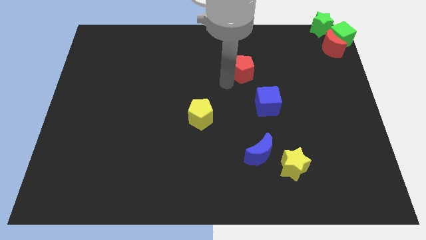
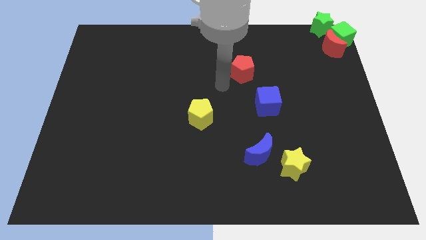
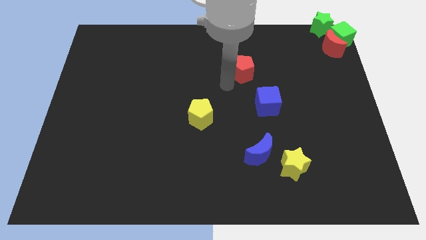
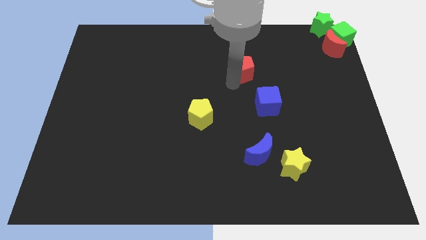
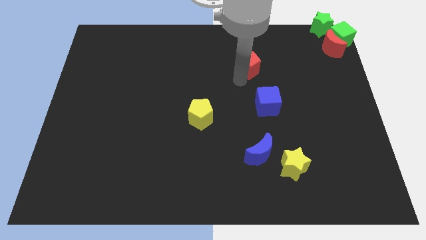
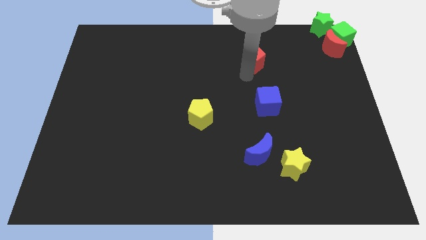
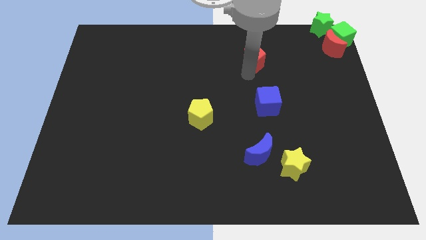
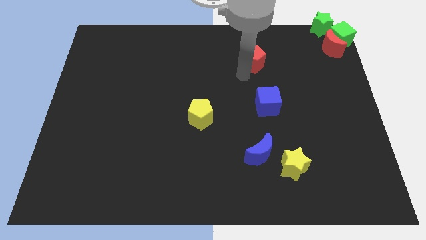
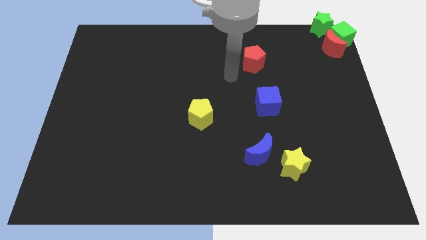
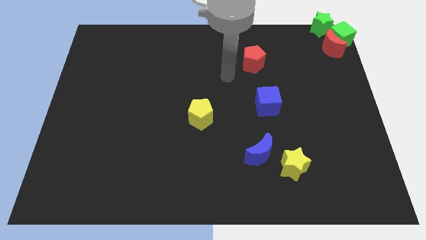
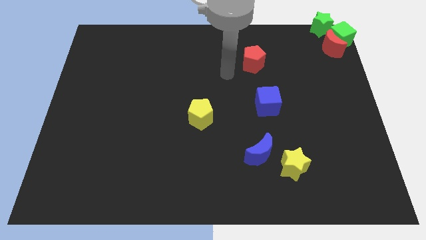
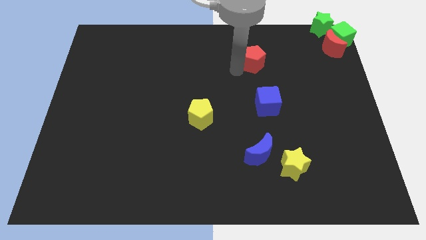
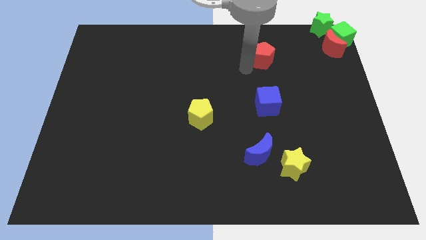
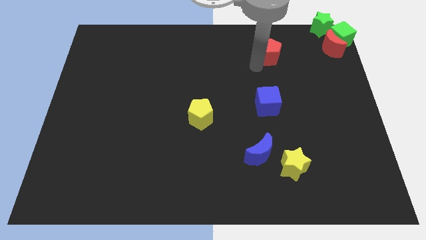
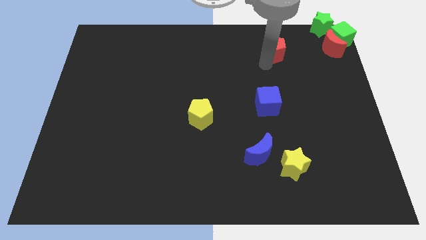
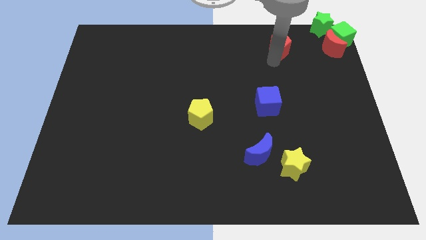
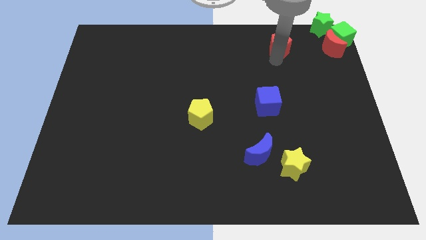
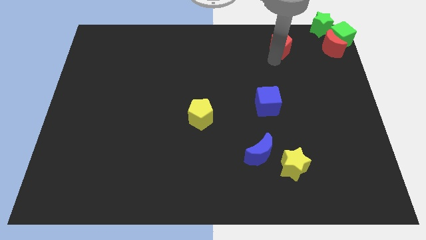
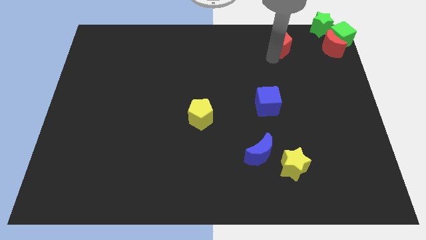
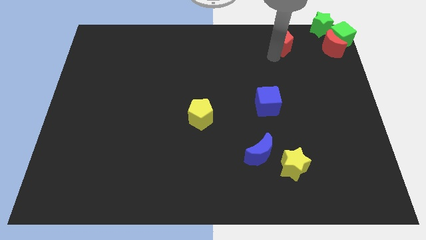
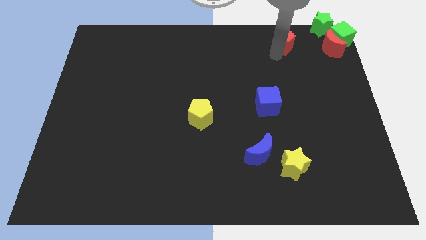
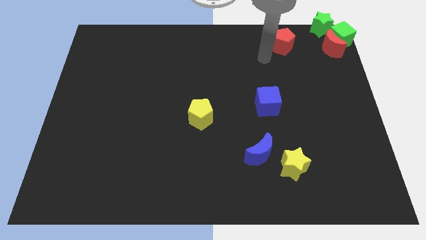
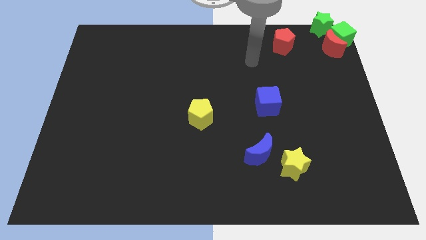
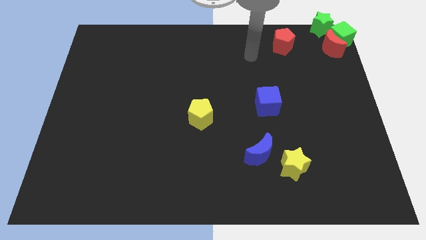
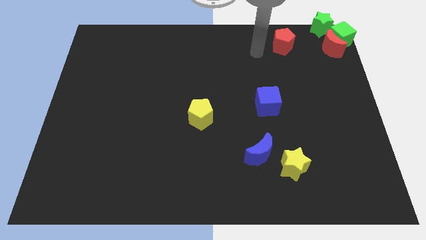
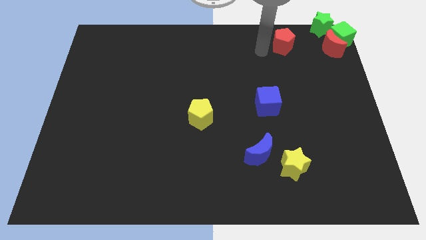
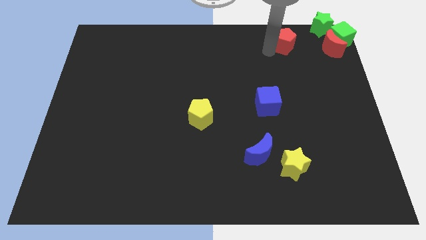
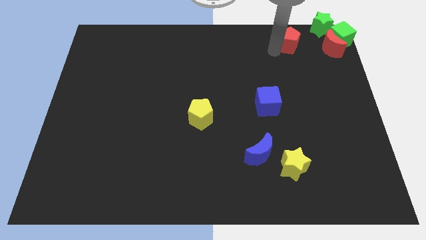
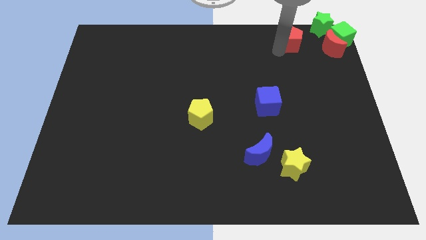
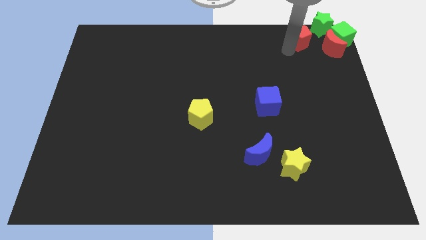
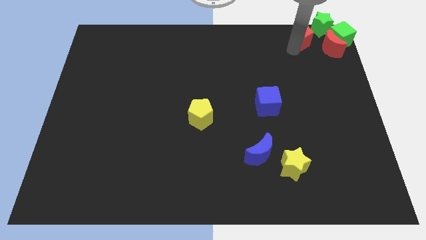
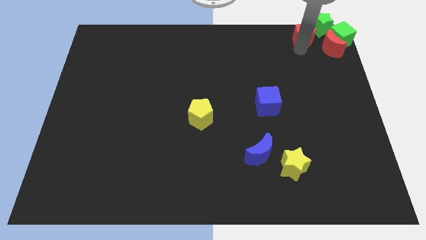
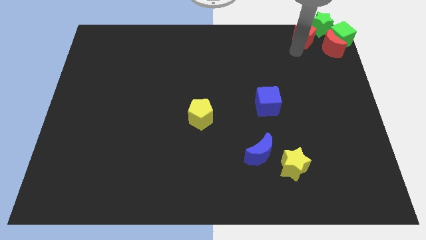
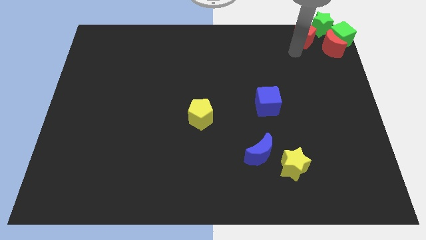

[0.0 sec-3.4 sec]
move the red pentagon towards the group of blocks at the top right corner of the table

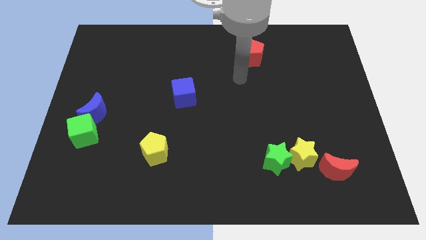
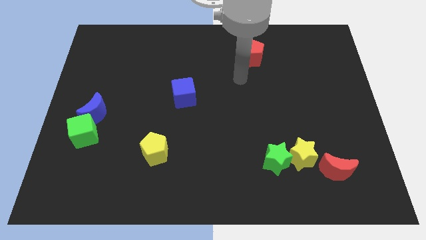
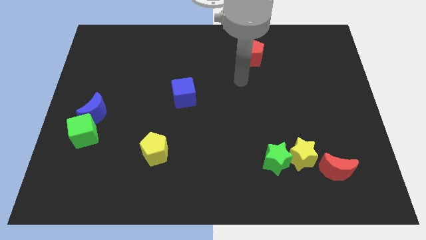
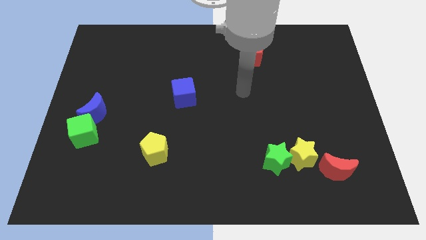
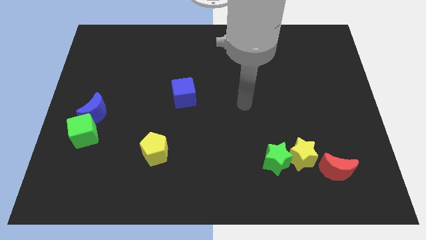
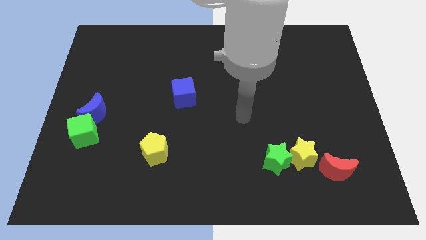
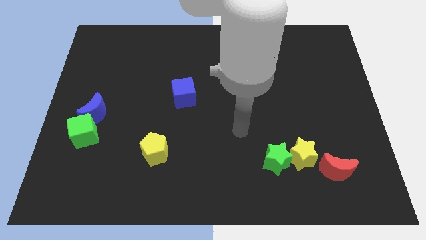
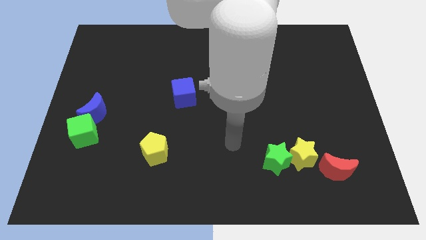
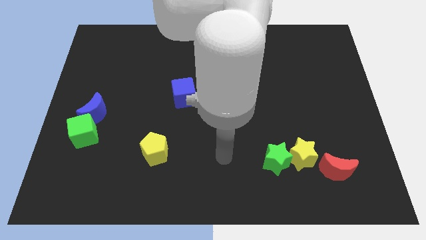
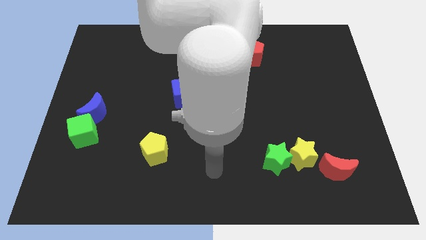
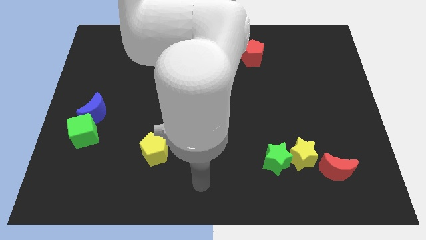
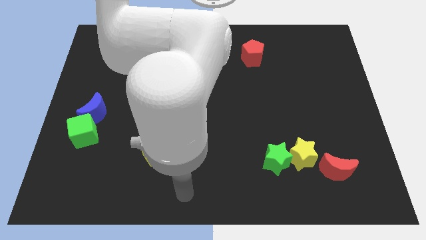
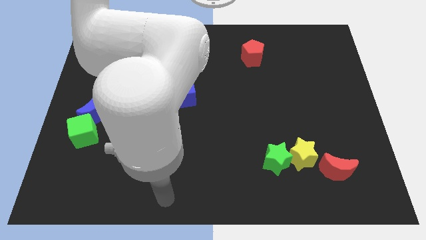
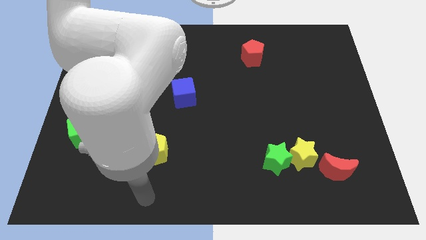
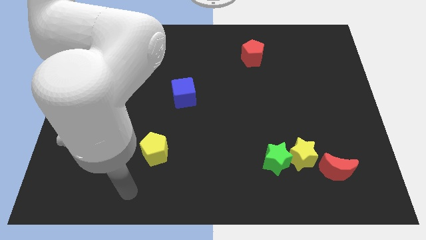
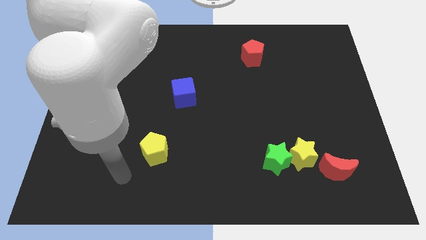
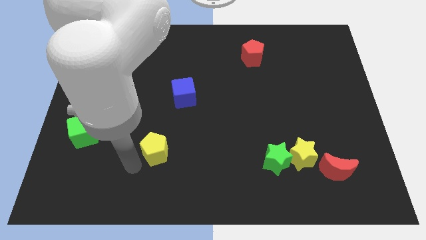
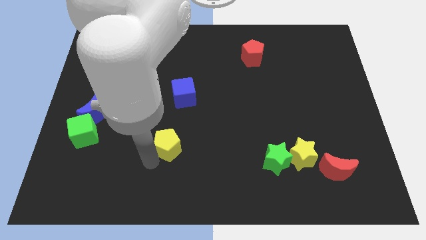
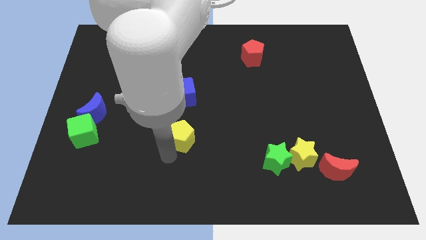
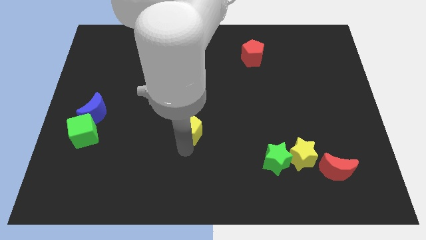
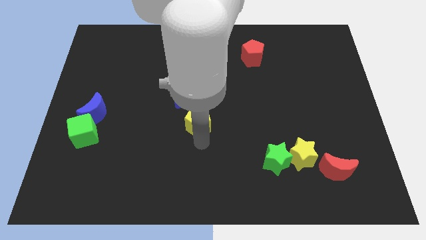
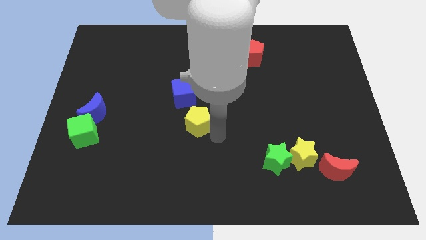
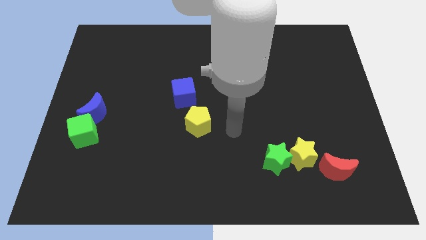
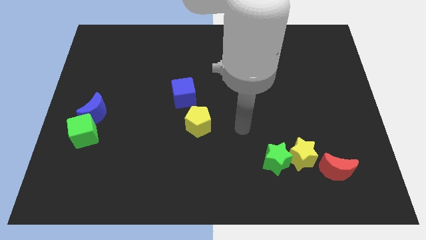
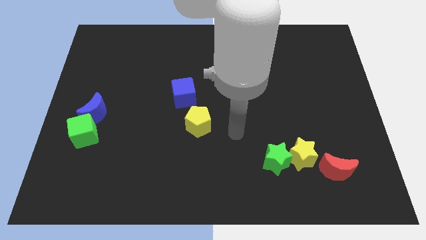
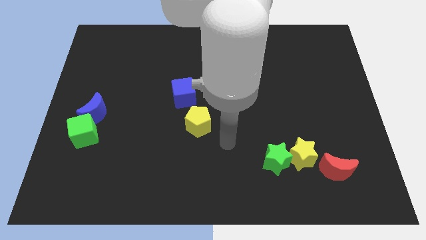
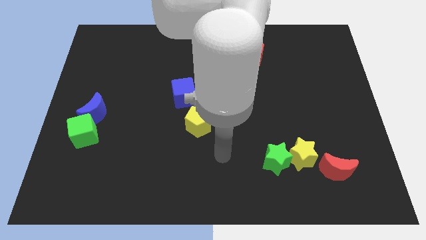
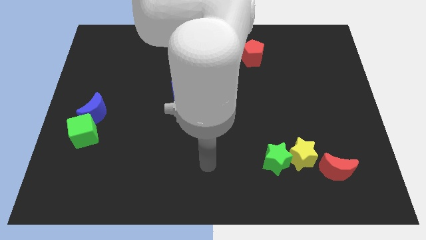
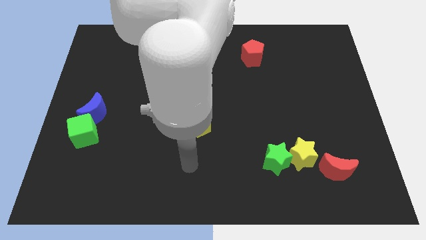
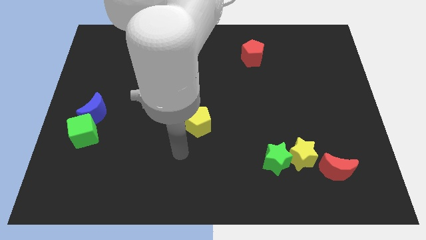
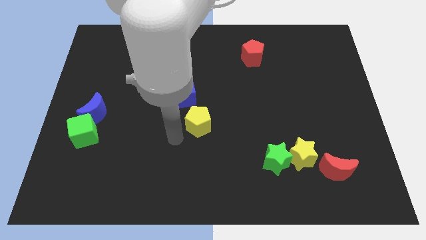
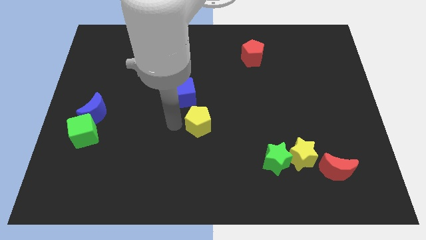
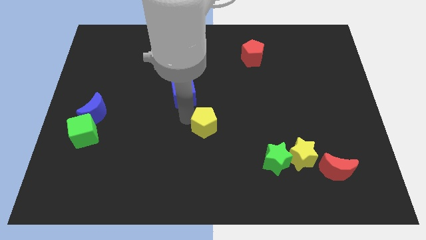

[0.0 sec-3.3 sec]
push yellow pentagon towards blue cube

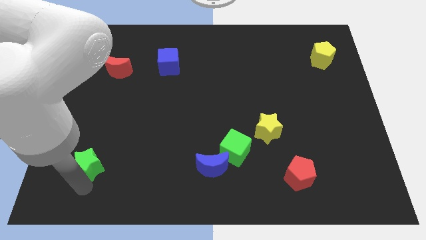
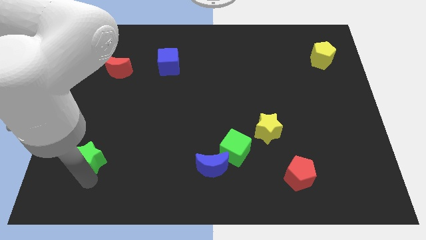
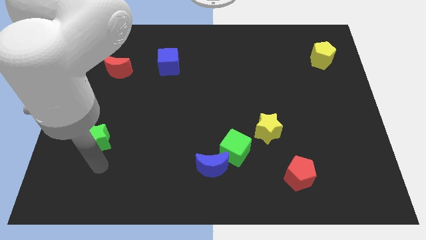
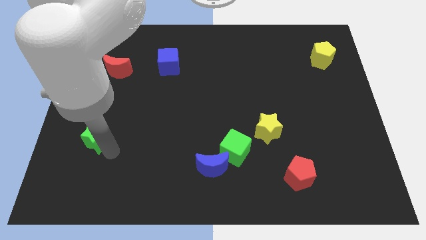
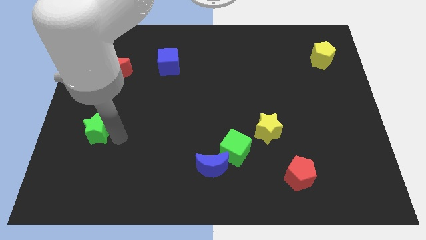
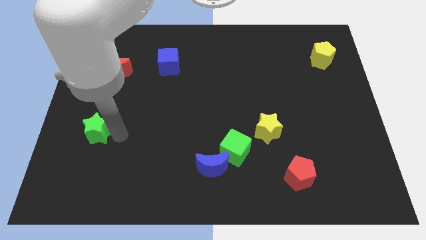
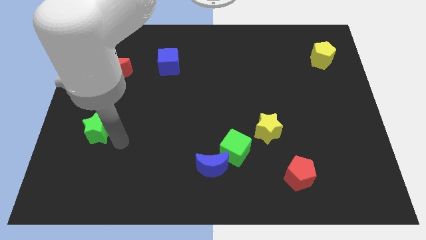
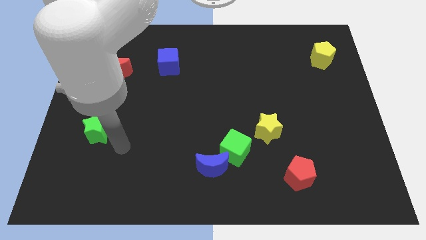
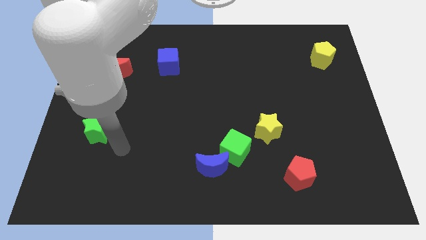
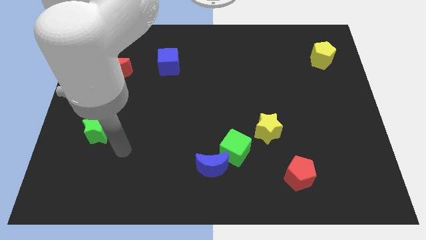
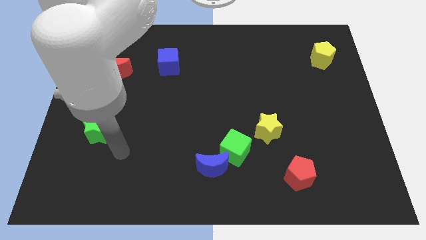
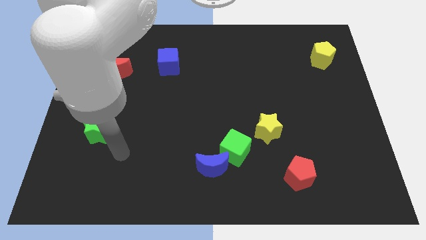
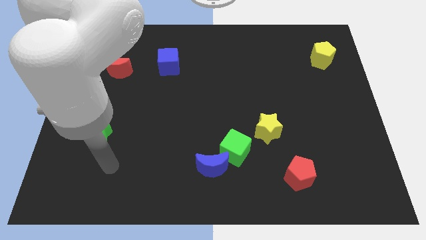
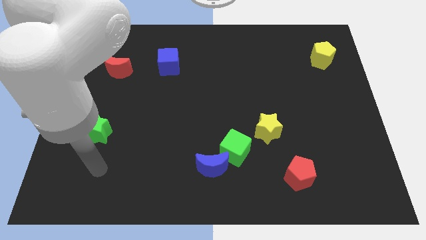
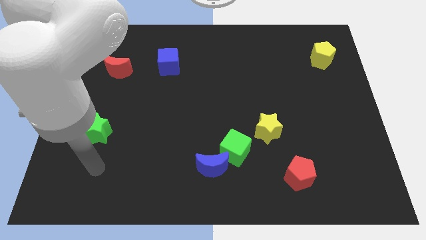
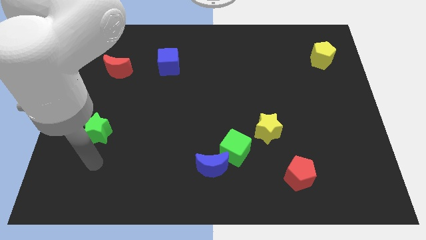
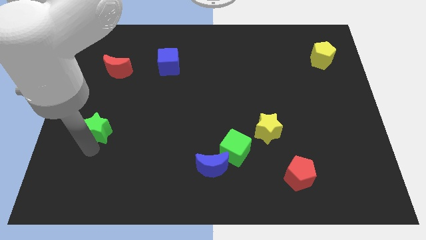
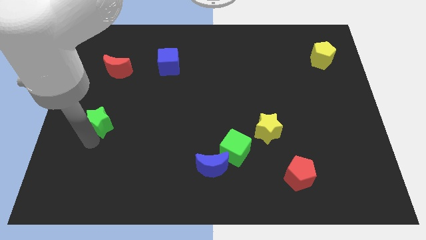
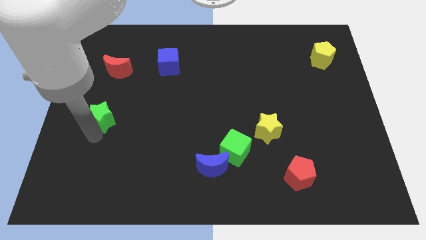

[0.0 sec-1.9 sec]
move the green star slightly towards top of the board

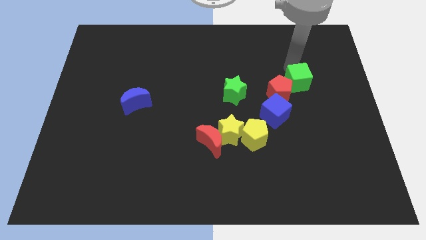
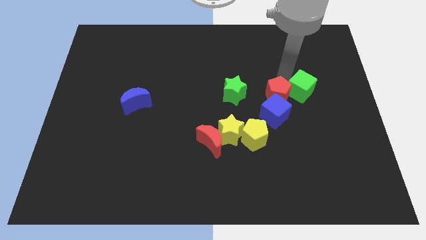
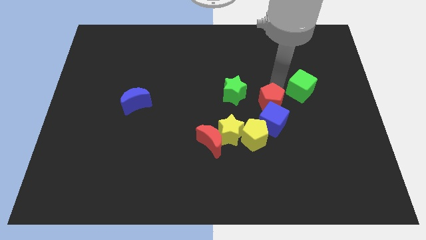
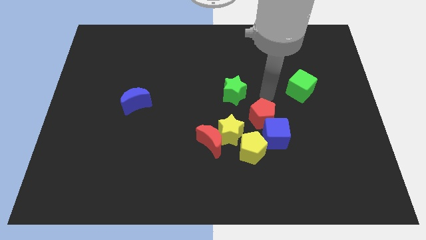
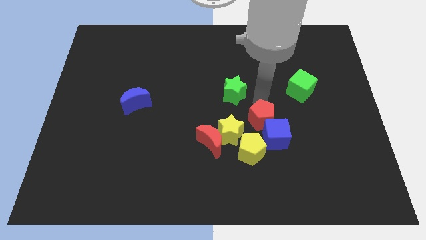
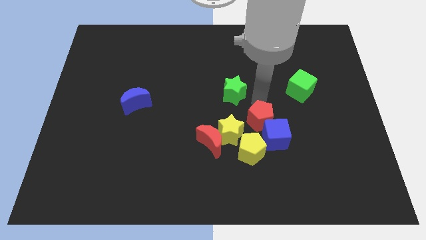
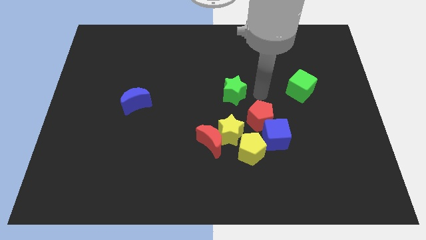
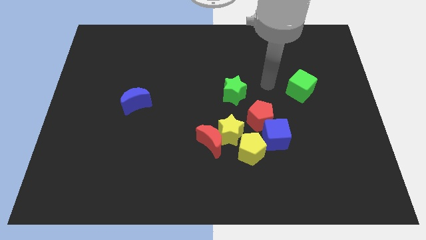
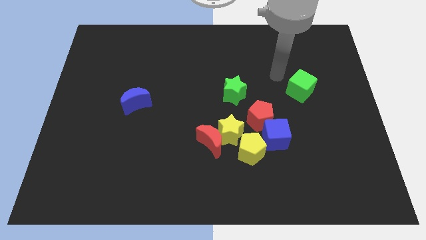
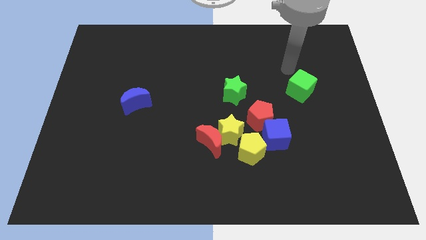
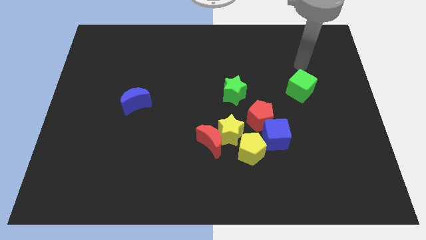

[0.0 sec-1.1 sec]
push the red pentagon into the blue cube
